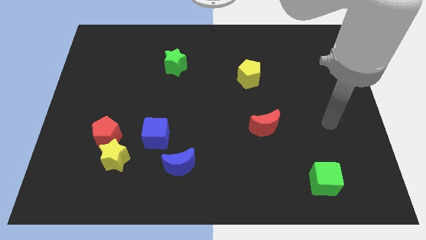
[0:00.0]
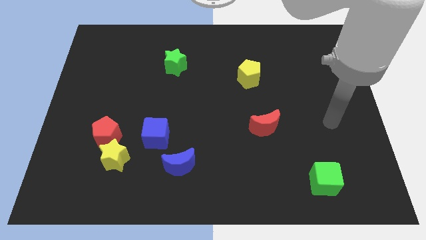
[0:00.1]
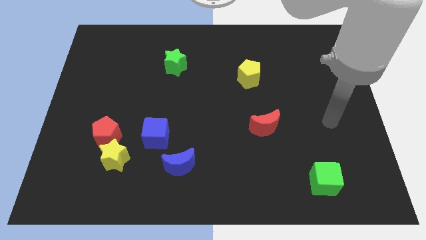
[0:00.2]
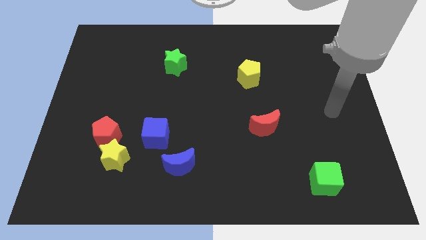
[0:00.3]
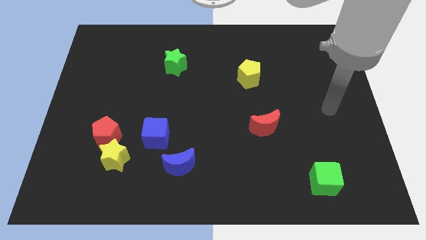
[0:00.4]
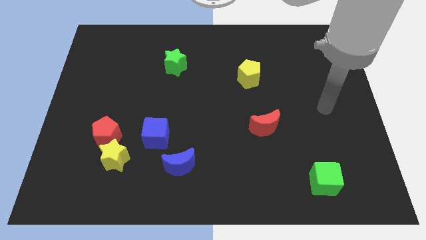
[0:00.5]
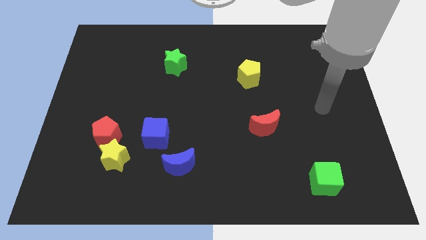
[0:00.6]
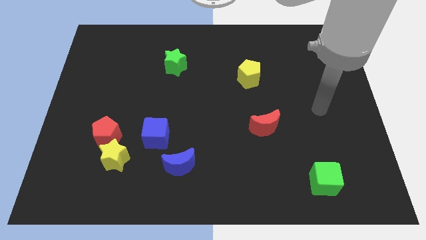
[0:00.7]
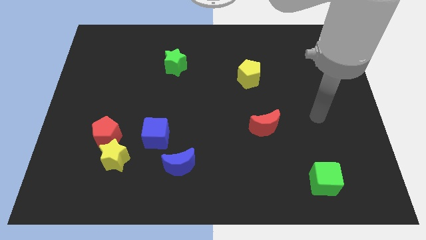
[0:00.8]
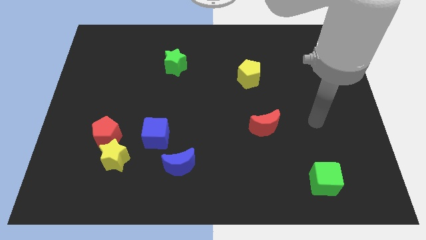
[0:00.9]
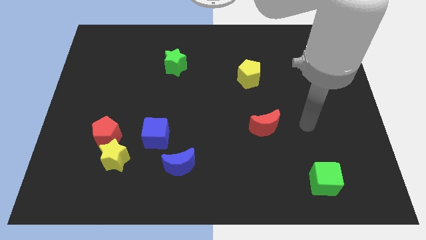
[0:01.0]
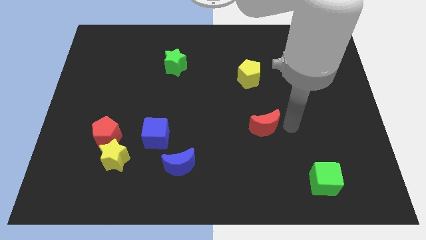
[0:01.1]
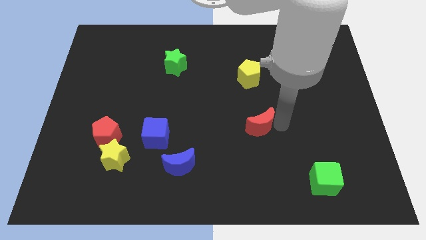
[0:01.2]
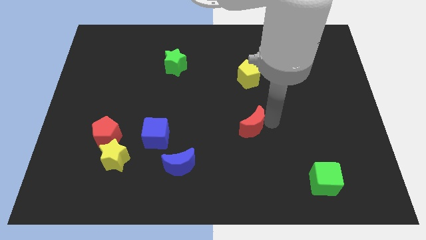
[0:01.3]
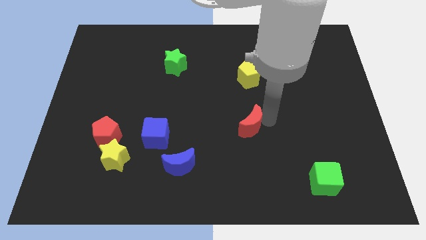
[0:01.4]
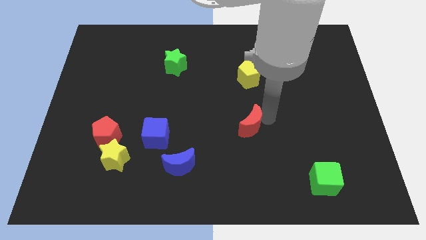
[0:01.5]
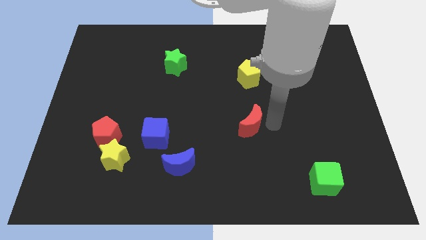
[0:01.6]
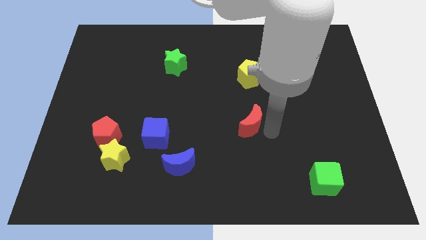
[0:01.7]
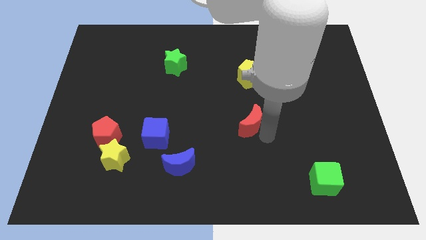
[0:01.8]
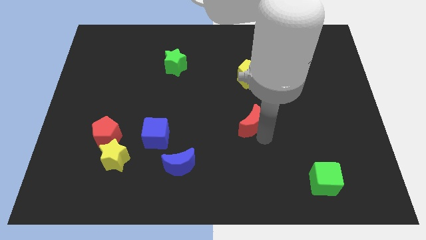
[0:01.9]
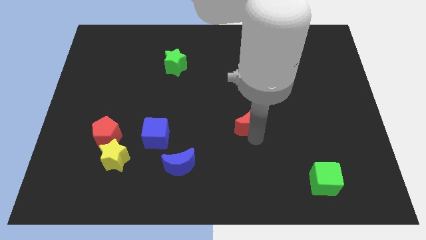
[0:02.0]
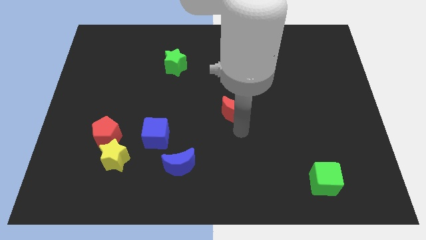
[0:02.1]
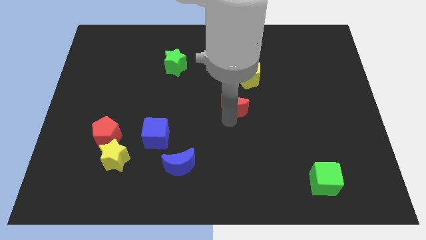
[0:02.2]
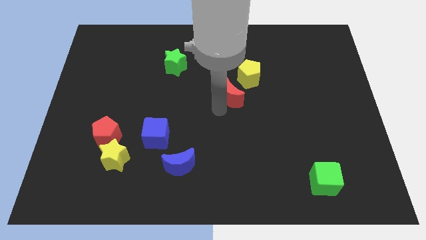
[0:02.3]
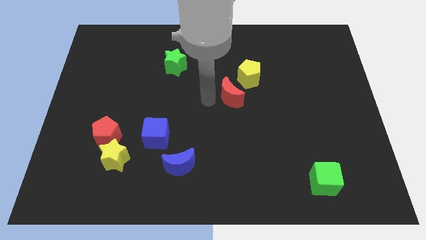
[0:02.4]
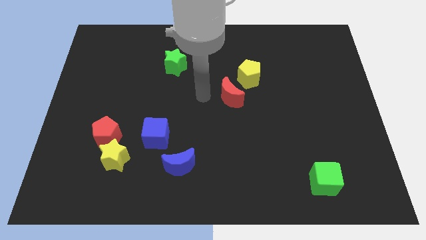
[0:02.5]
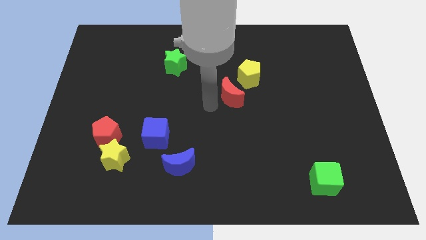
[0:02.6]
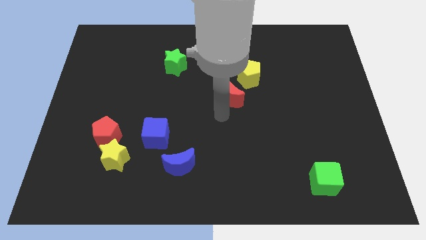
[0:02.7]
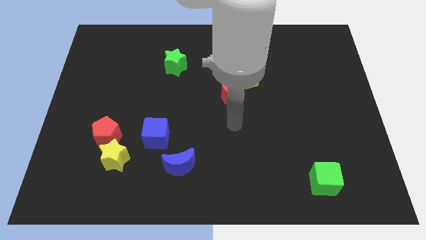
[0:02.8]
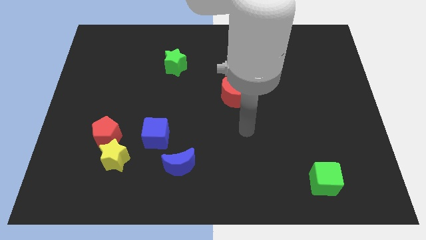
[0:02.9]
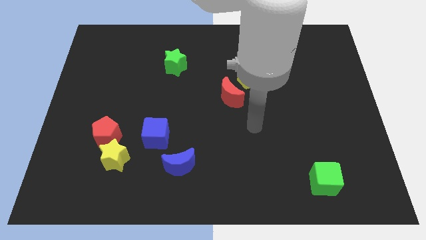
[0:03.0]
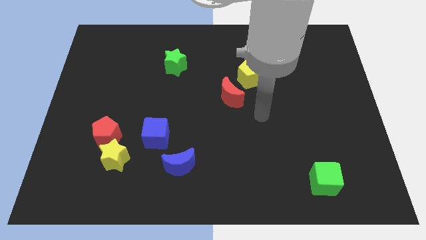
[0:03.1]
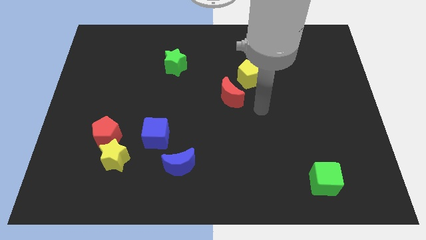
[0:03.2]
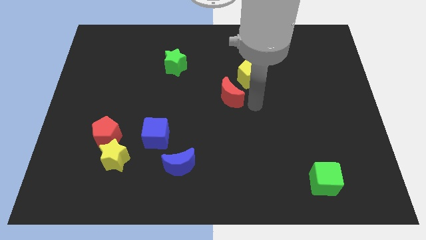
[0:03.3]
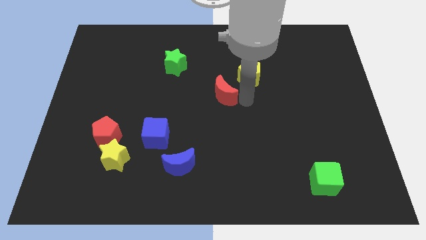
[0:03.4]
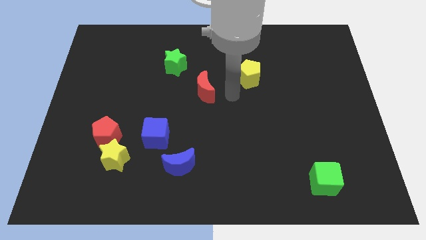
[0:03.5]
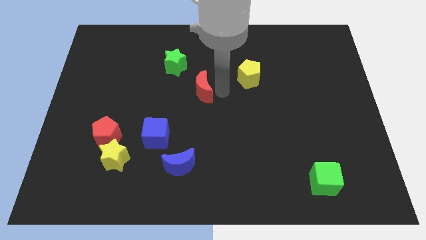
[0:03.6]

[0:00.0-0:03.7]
push the red crescent diagonally to the bottom right of the green star

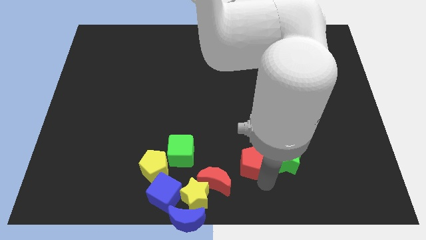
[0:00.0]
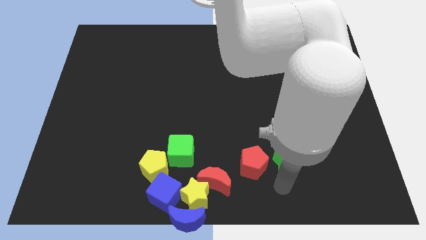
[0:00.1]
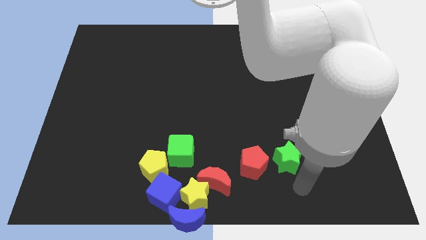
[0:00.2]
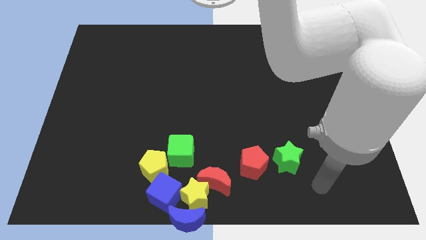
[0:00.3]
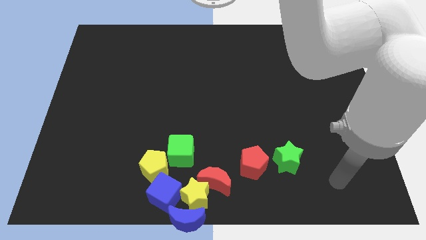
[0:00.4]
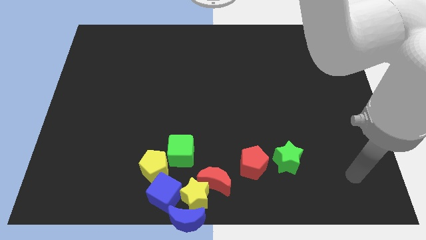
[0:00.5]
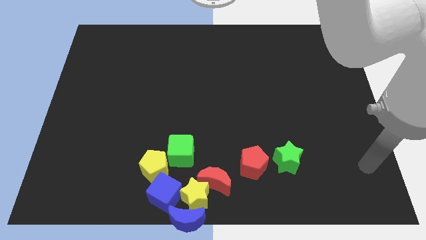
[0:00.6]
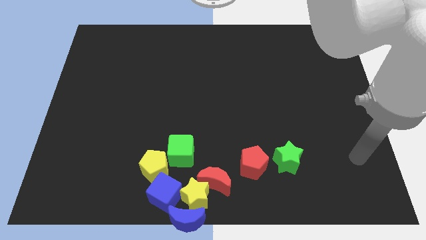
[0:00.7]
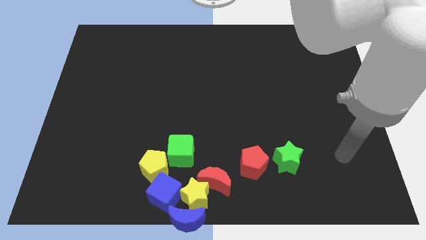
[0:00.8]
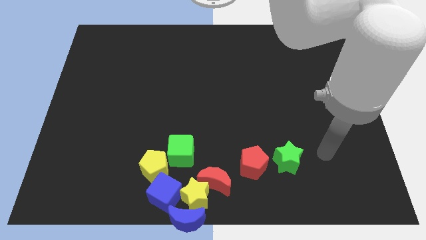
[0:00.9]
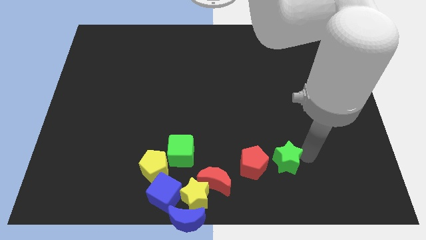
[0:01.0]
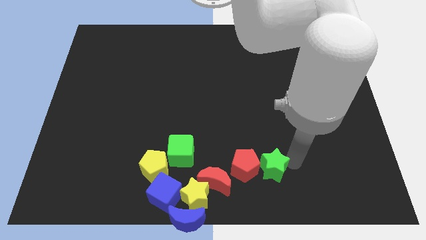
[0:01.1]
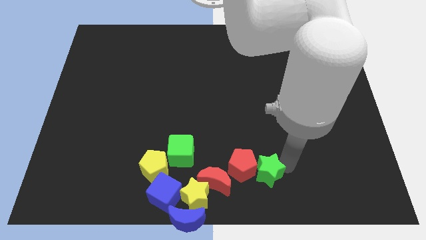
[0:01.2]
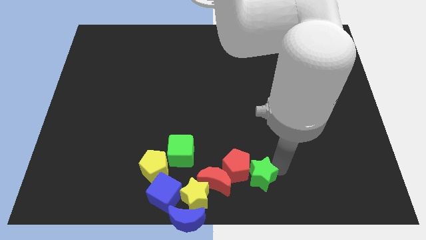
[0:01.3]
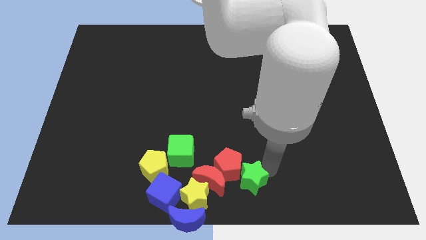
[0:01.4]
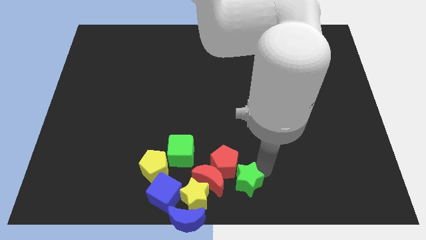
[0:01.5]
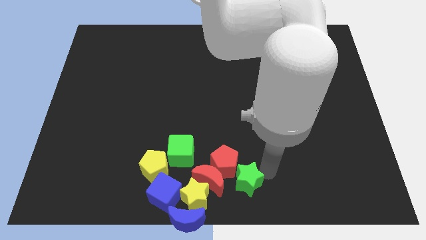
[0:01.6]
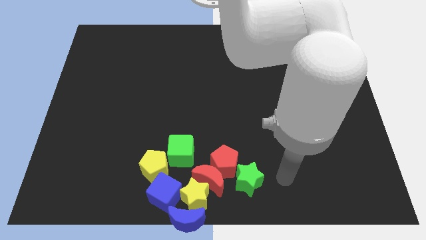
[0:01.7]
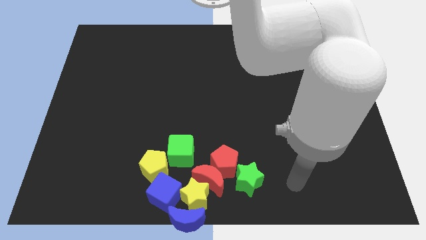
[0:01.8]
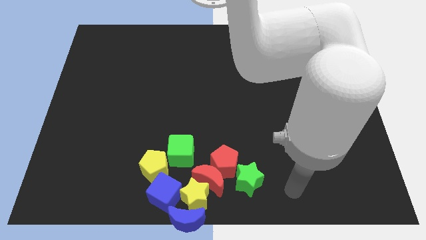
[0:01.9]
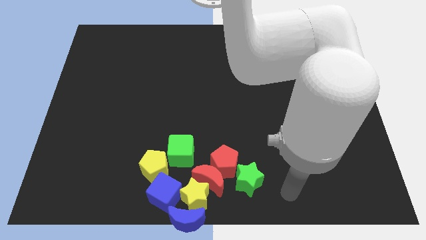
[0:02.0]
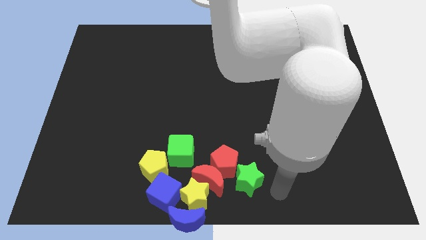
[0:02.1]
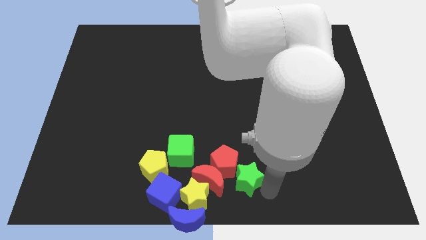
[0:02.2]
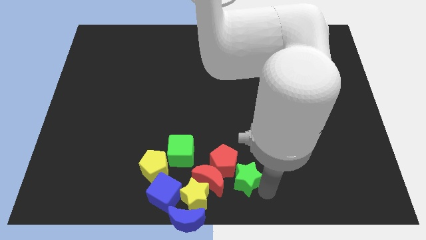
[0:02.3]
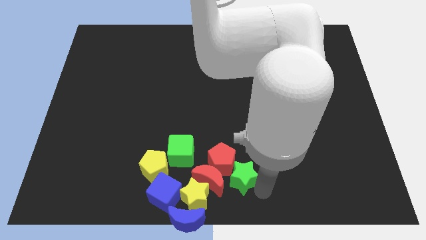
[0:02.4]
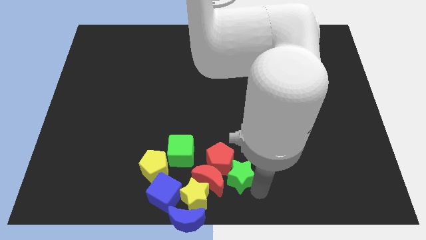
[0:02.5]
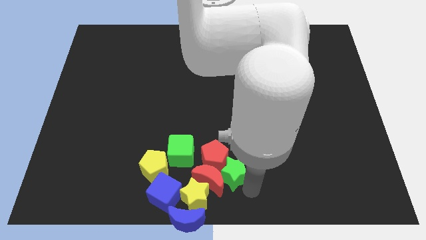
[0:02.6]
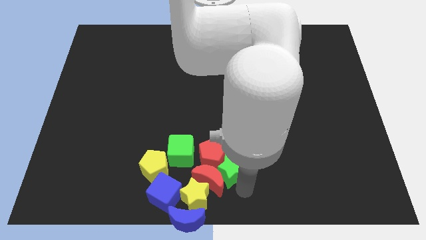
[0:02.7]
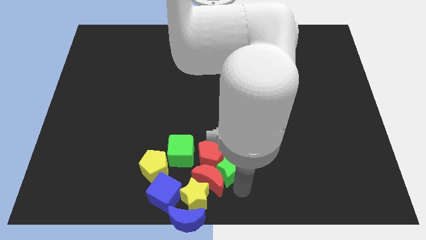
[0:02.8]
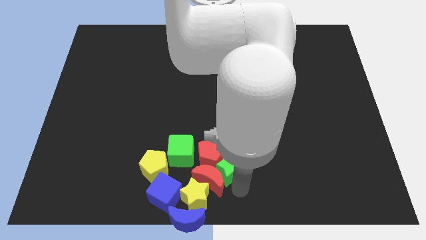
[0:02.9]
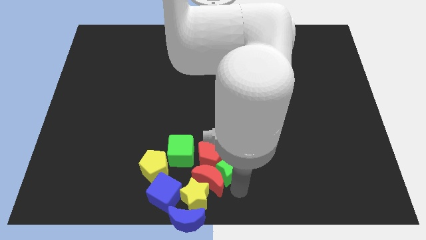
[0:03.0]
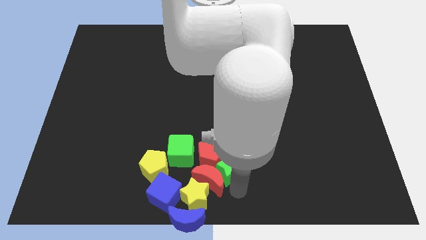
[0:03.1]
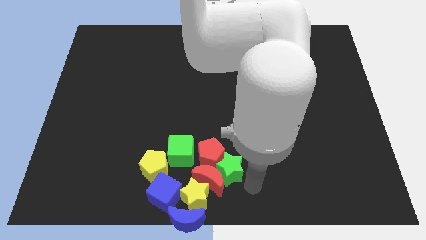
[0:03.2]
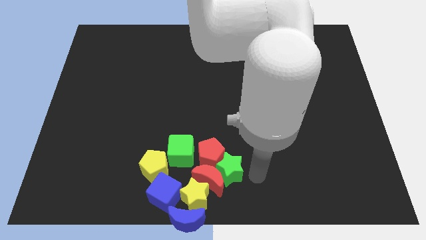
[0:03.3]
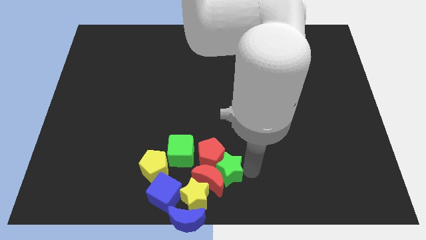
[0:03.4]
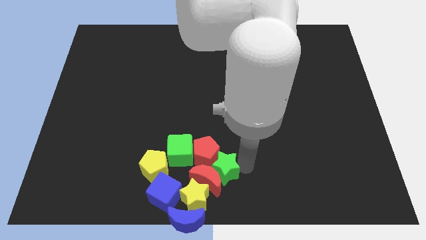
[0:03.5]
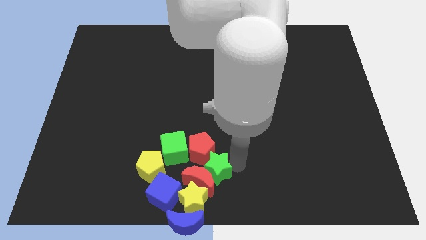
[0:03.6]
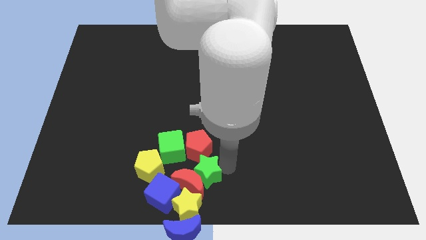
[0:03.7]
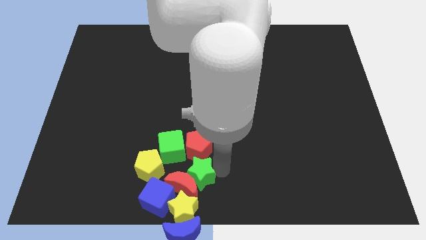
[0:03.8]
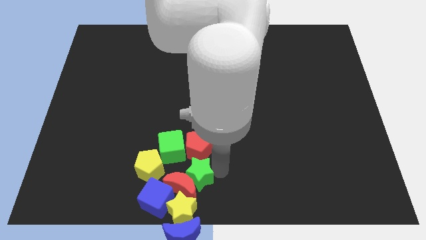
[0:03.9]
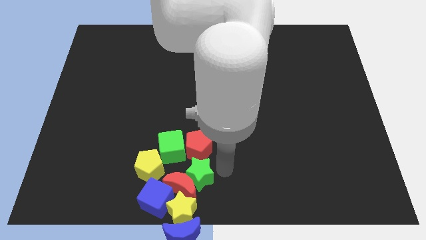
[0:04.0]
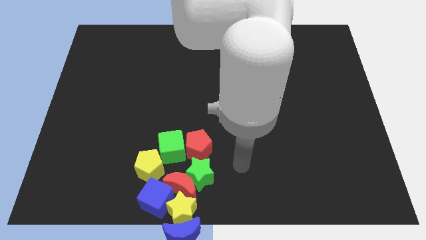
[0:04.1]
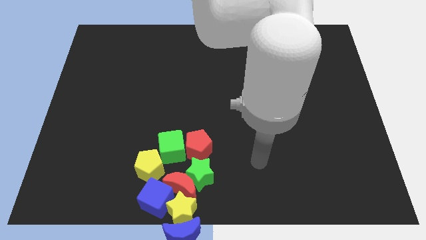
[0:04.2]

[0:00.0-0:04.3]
place all the blocks to form a group at the bottom center

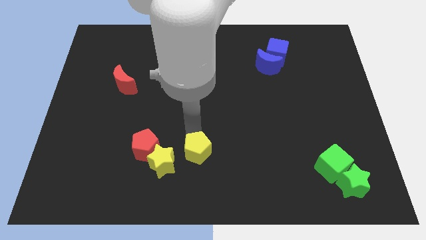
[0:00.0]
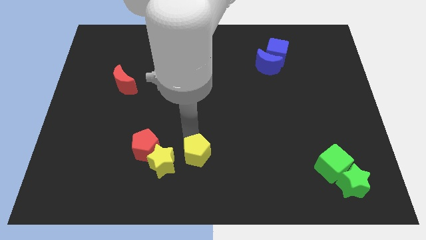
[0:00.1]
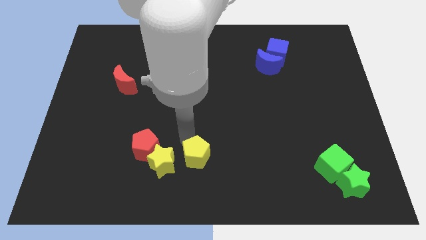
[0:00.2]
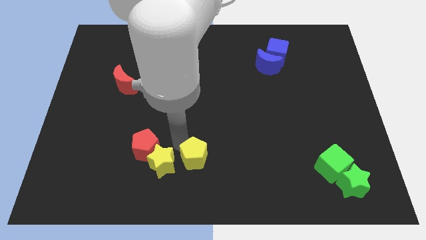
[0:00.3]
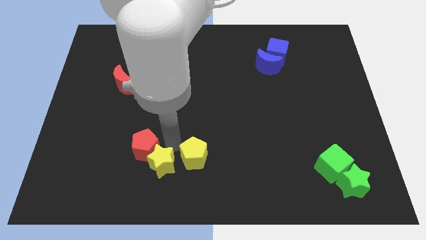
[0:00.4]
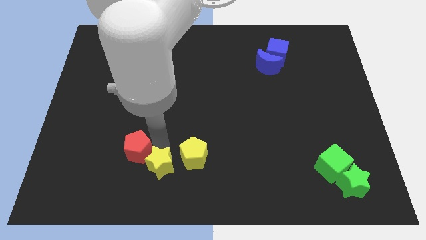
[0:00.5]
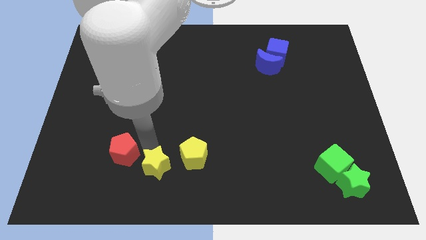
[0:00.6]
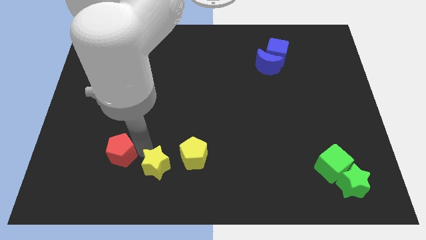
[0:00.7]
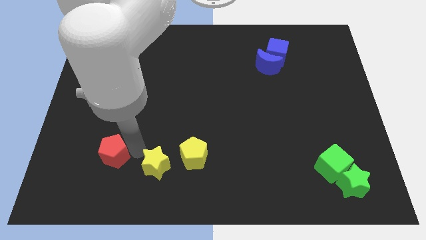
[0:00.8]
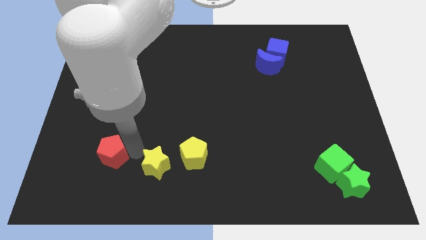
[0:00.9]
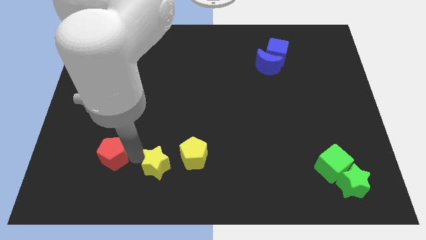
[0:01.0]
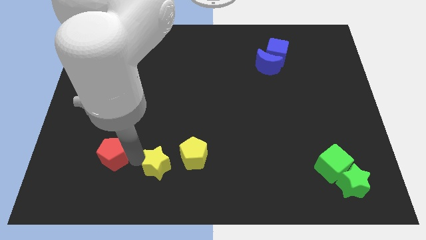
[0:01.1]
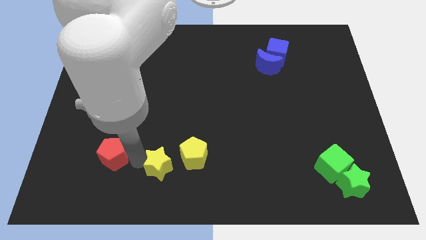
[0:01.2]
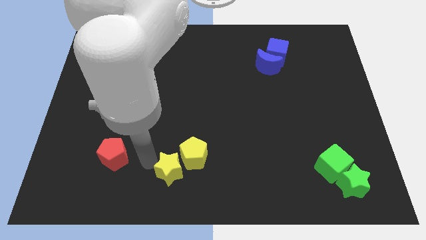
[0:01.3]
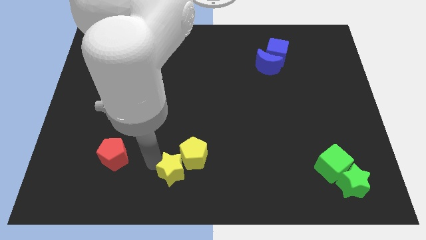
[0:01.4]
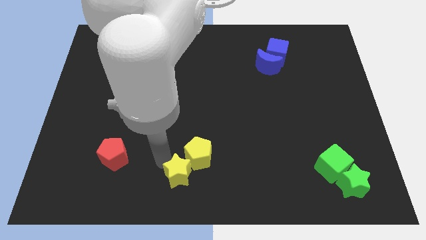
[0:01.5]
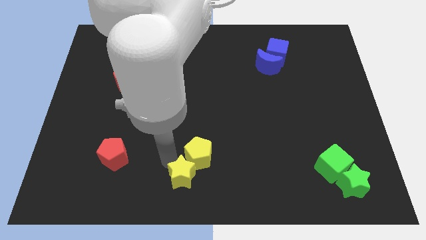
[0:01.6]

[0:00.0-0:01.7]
separate the yellow star and the red pentagon
